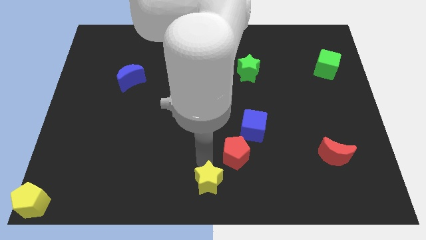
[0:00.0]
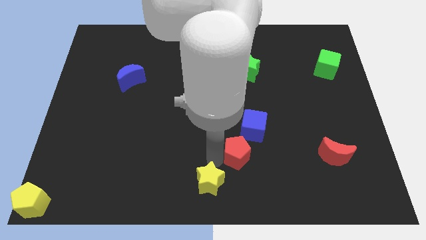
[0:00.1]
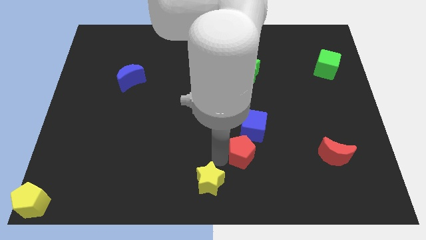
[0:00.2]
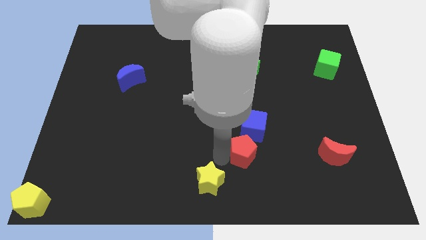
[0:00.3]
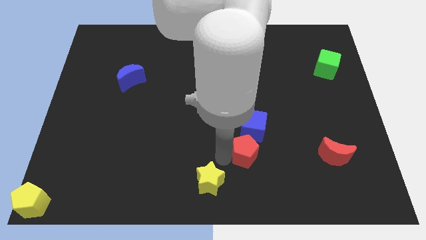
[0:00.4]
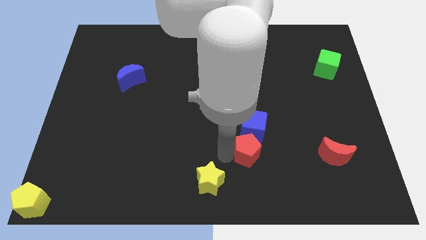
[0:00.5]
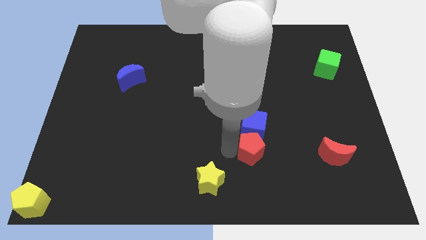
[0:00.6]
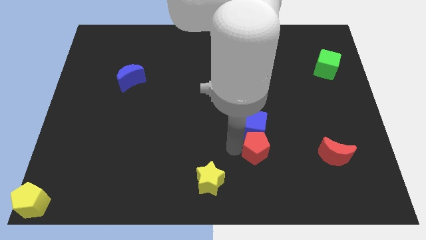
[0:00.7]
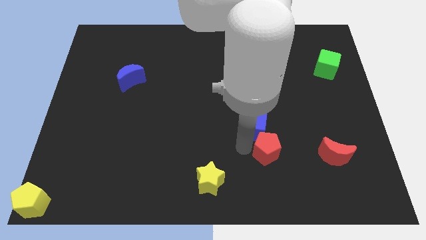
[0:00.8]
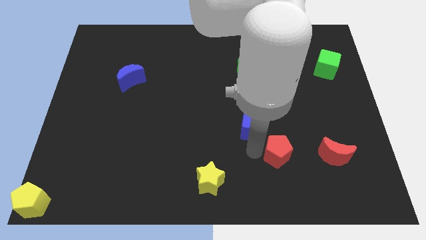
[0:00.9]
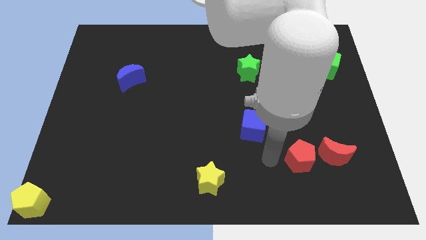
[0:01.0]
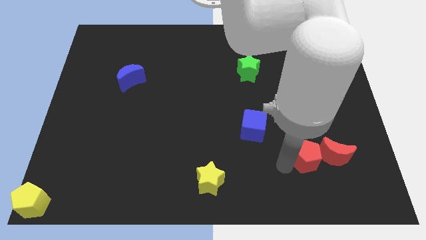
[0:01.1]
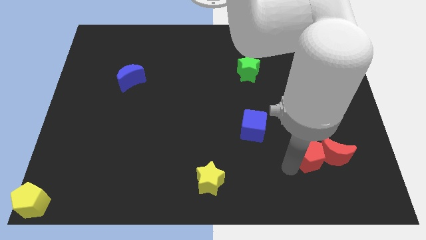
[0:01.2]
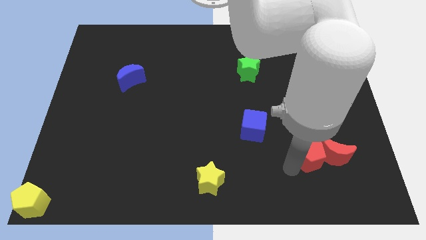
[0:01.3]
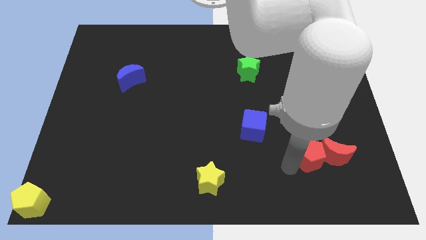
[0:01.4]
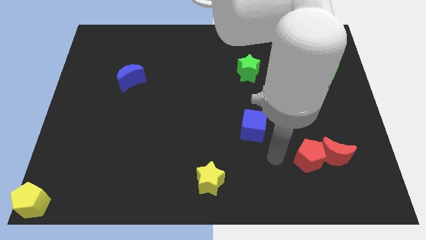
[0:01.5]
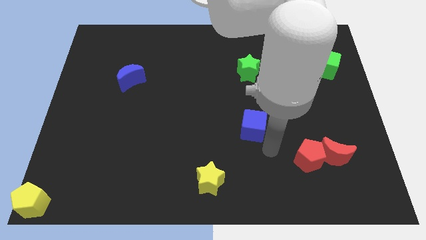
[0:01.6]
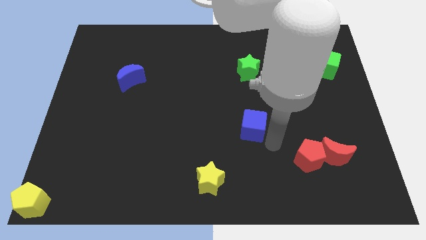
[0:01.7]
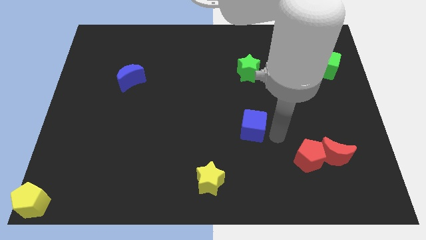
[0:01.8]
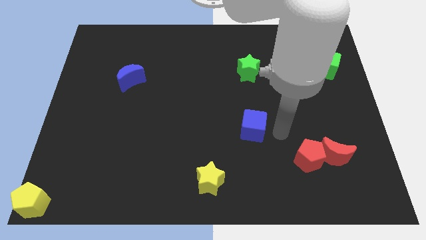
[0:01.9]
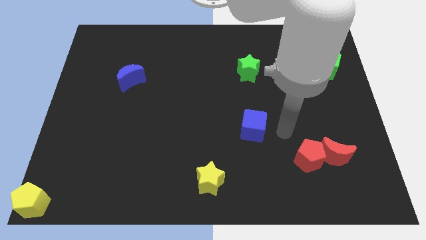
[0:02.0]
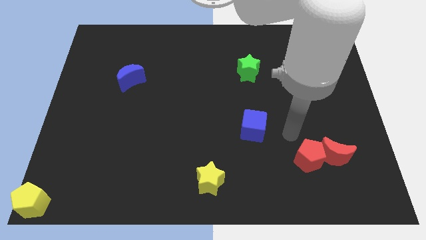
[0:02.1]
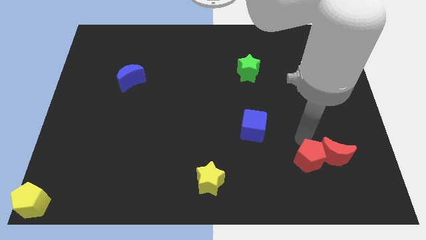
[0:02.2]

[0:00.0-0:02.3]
place the red pentagon towards the left side of the red crescent

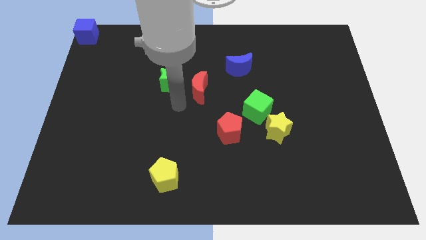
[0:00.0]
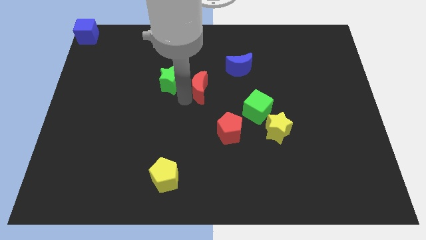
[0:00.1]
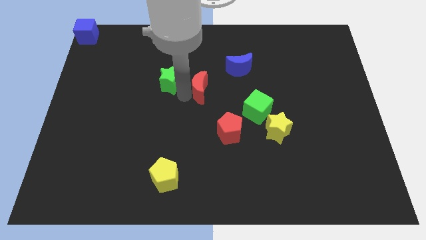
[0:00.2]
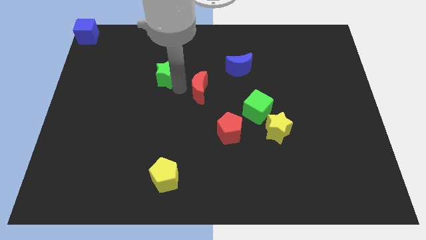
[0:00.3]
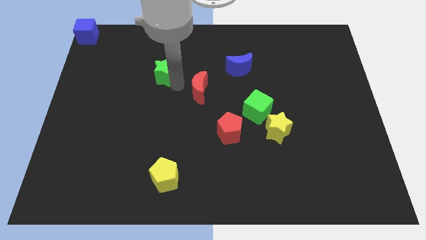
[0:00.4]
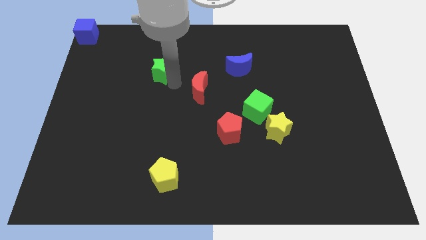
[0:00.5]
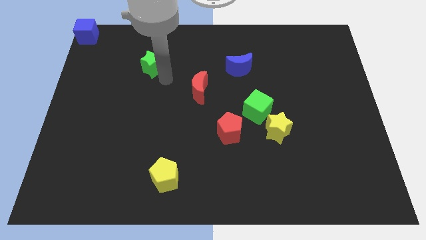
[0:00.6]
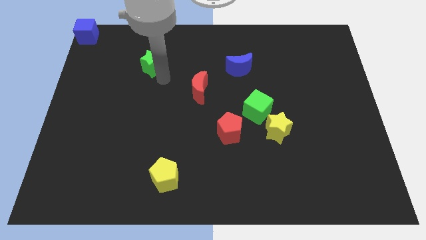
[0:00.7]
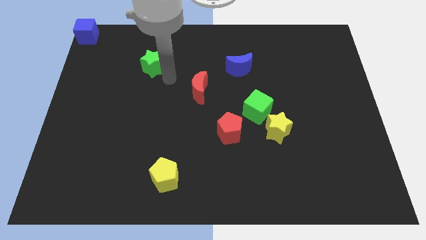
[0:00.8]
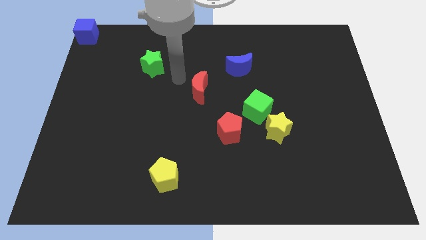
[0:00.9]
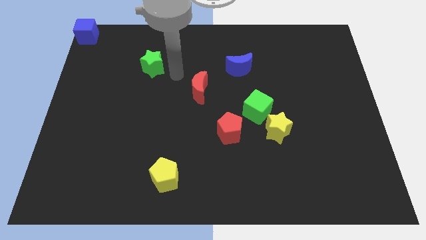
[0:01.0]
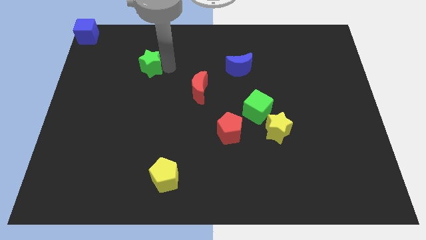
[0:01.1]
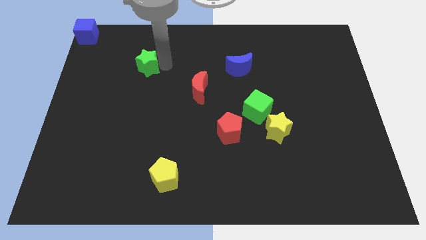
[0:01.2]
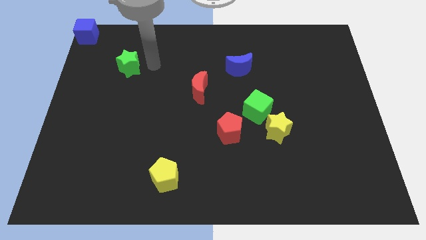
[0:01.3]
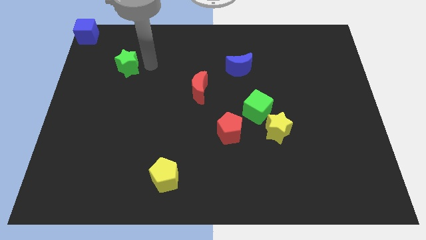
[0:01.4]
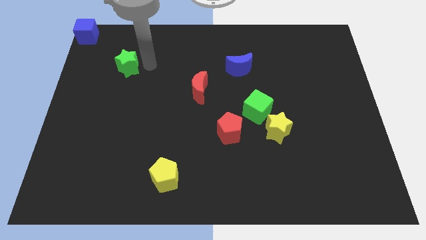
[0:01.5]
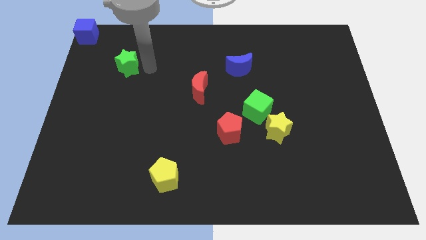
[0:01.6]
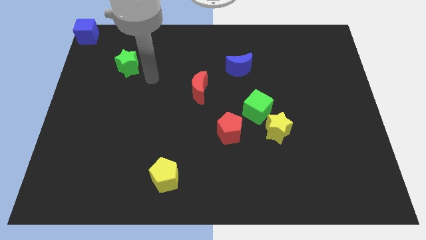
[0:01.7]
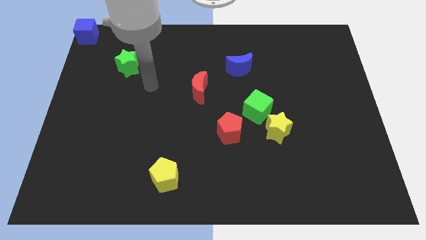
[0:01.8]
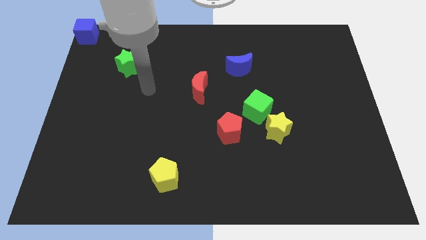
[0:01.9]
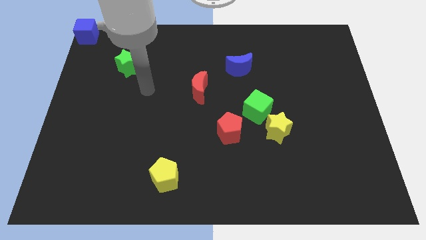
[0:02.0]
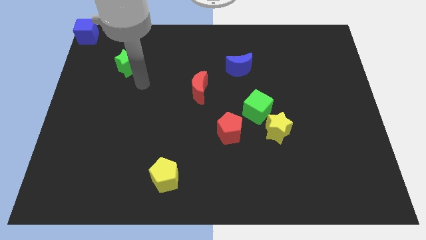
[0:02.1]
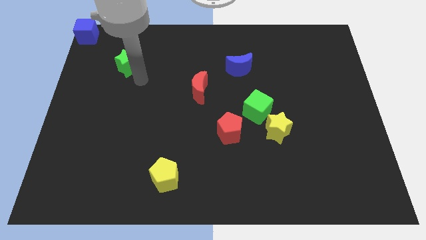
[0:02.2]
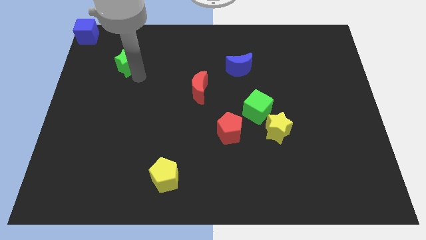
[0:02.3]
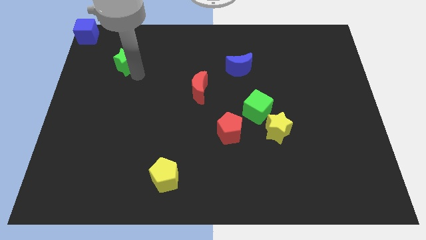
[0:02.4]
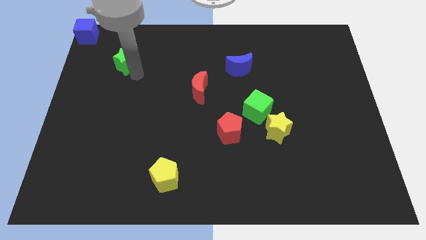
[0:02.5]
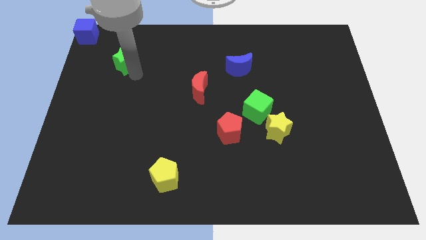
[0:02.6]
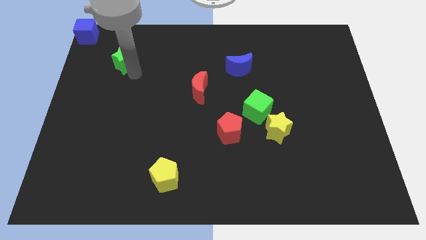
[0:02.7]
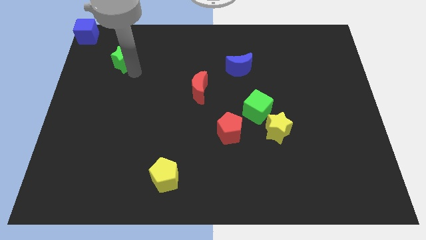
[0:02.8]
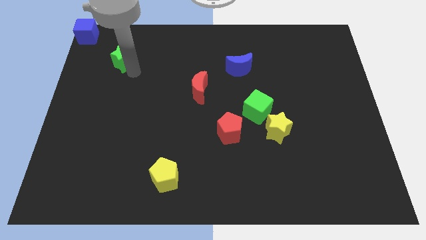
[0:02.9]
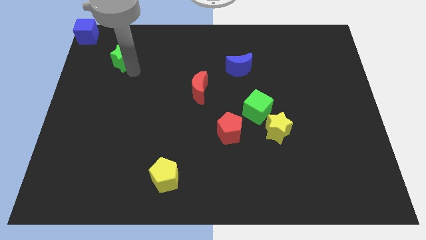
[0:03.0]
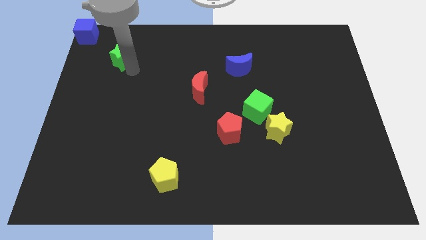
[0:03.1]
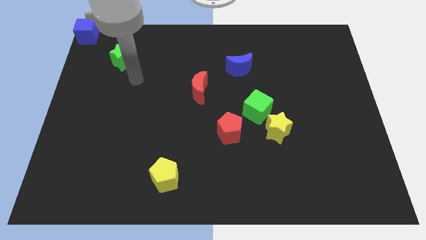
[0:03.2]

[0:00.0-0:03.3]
move the green star to the diagonally bottom right of the blue cube

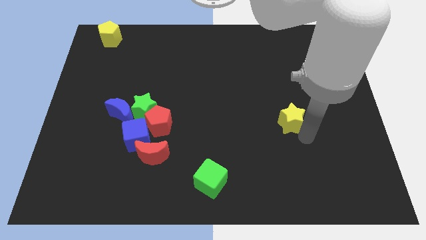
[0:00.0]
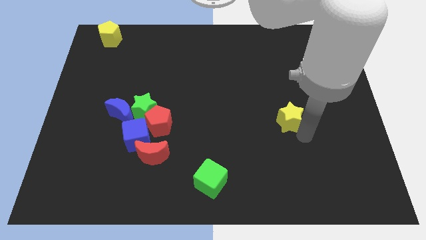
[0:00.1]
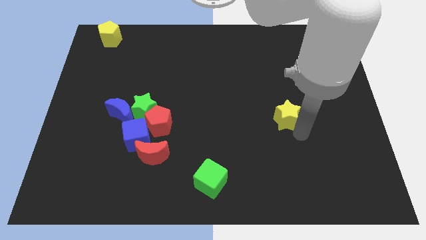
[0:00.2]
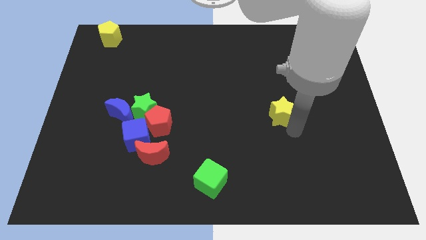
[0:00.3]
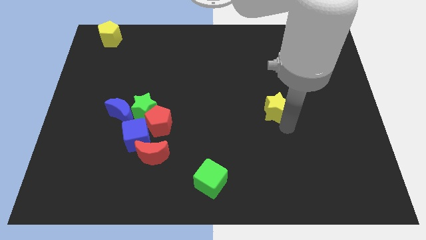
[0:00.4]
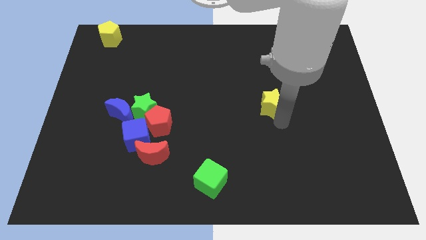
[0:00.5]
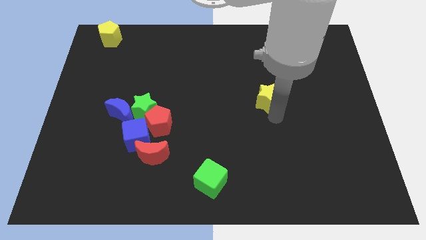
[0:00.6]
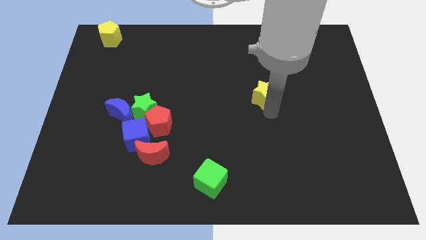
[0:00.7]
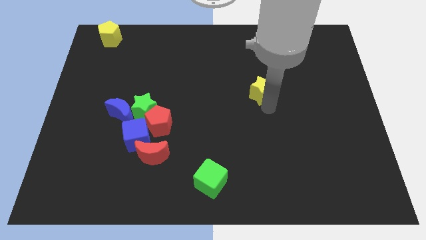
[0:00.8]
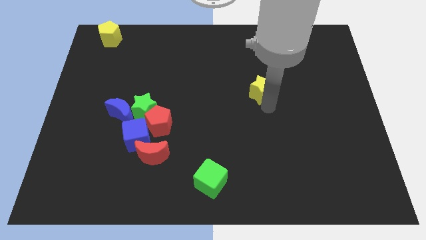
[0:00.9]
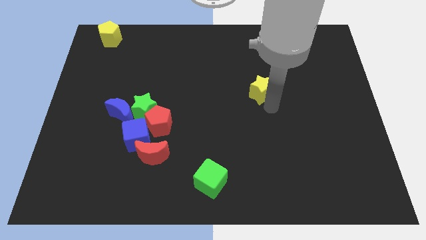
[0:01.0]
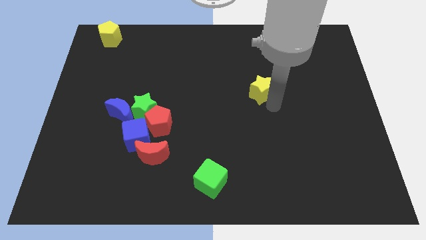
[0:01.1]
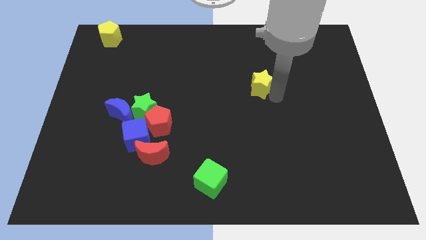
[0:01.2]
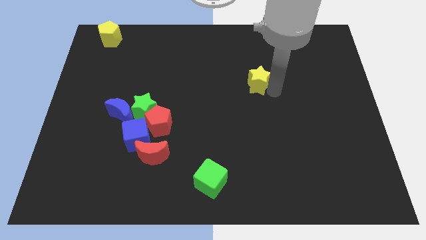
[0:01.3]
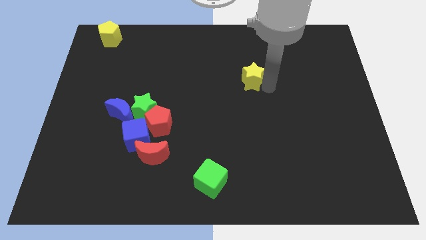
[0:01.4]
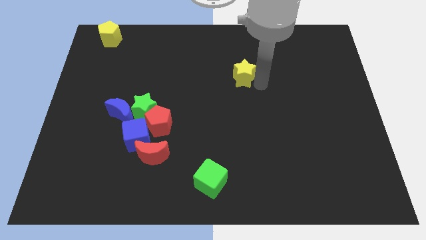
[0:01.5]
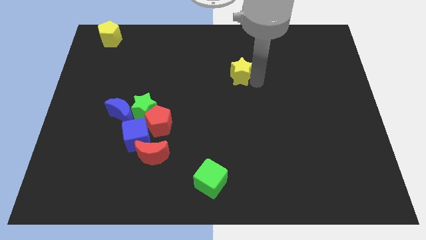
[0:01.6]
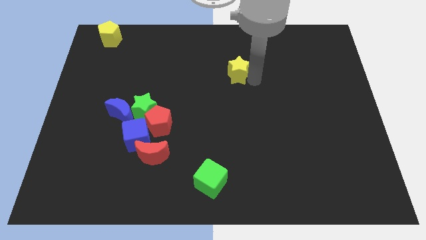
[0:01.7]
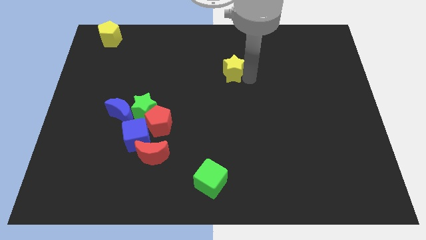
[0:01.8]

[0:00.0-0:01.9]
move the yellow star to the top center

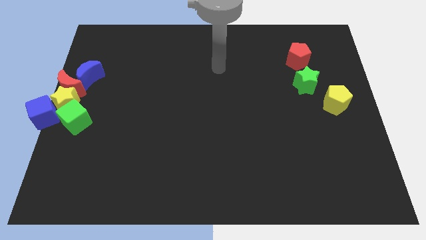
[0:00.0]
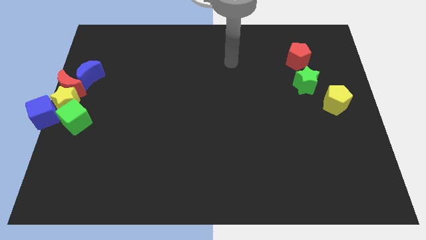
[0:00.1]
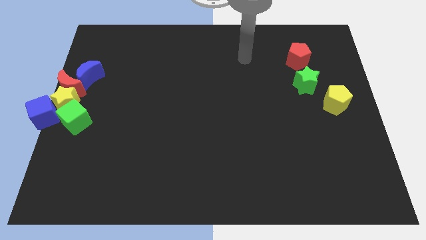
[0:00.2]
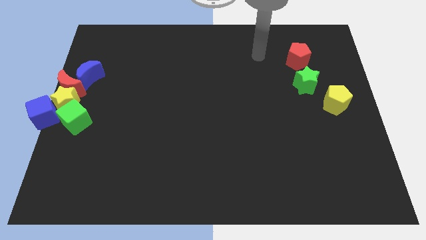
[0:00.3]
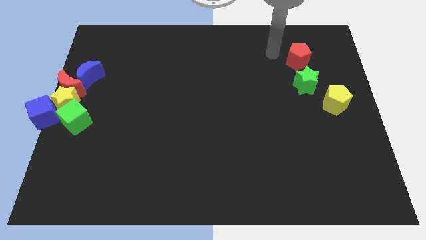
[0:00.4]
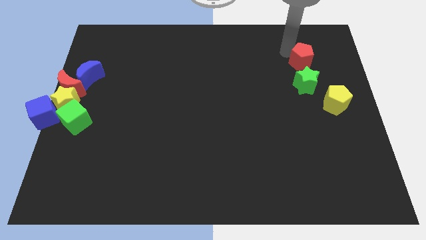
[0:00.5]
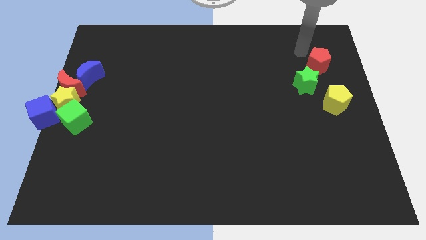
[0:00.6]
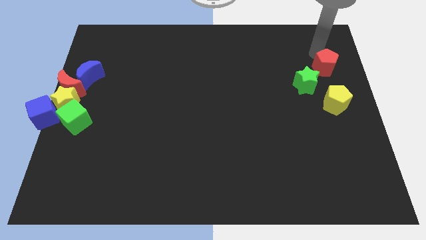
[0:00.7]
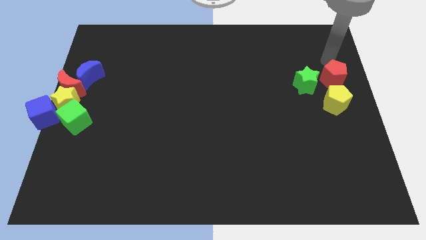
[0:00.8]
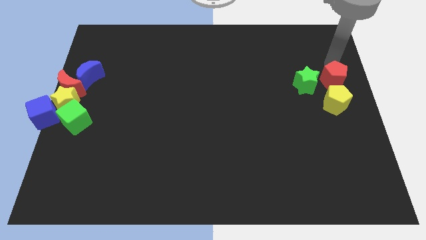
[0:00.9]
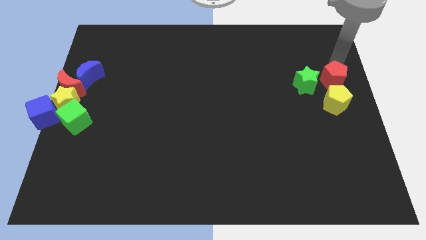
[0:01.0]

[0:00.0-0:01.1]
push the red pentagon to the top of the yellow pentagon

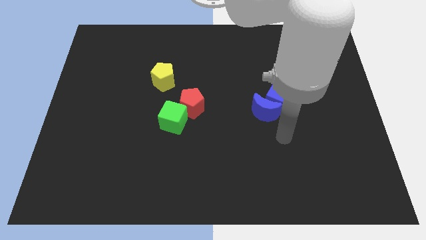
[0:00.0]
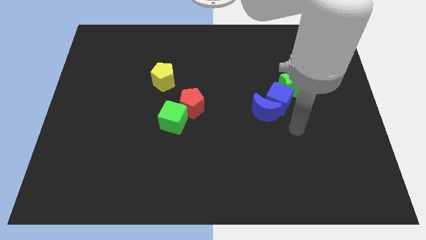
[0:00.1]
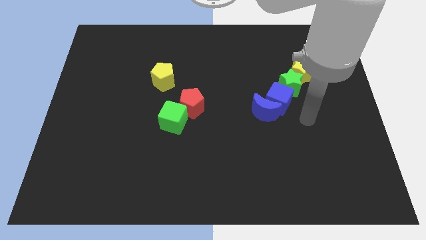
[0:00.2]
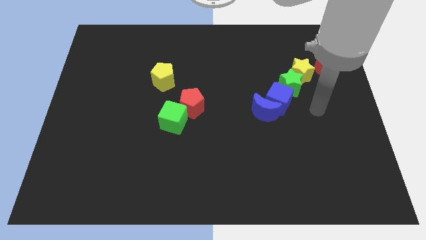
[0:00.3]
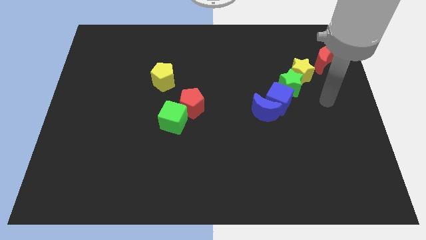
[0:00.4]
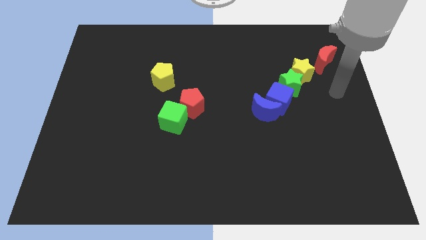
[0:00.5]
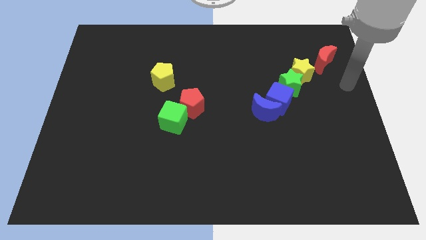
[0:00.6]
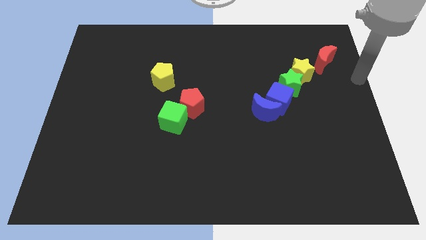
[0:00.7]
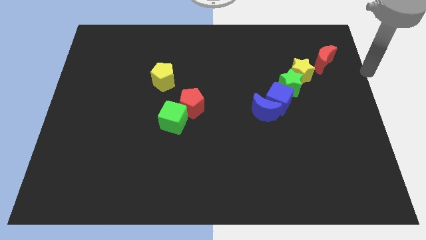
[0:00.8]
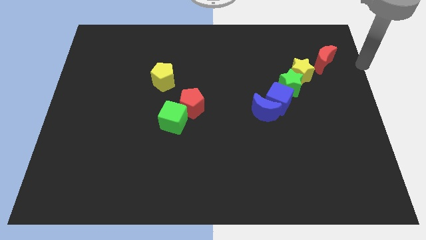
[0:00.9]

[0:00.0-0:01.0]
move your hand to the right of the red moon
